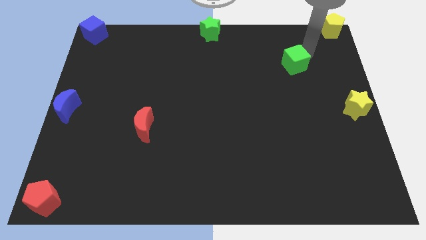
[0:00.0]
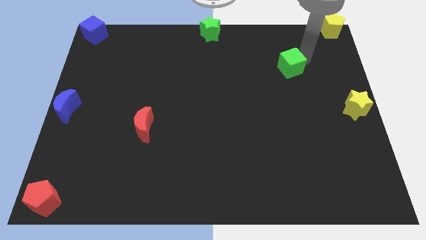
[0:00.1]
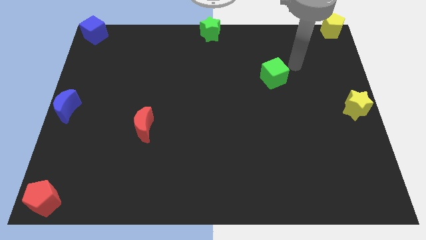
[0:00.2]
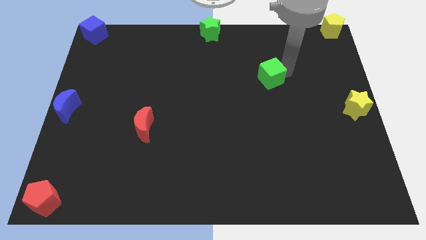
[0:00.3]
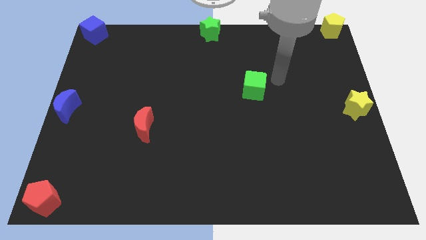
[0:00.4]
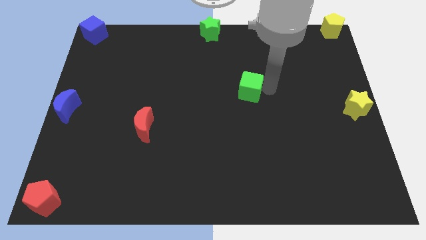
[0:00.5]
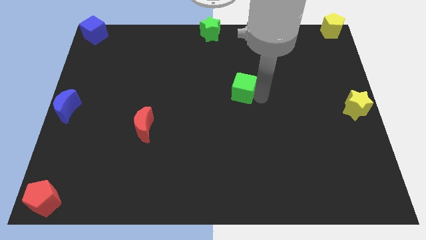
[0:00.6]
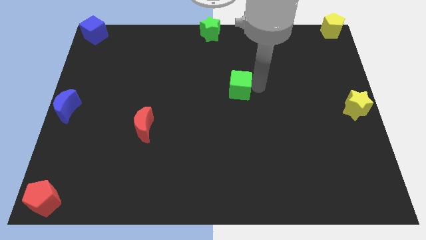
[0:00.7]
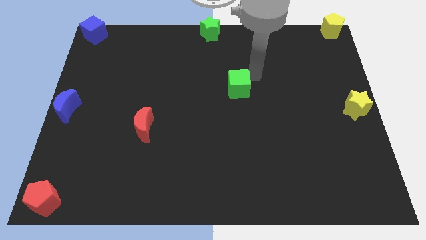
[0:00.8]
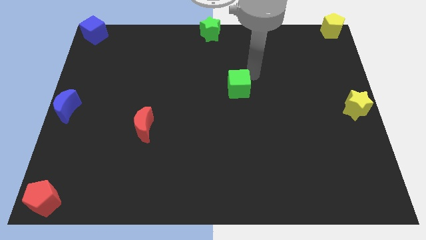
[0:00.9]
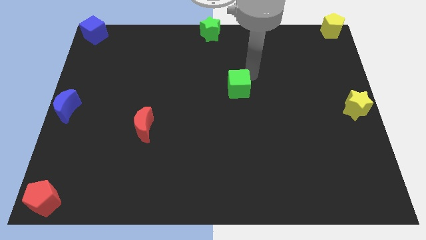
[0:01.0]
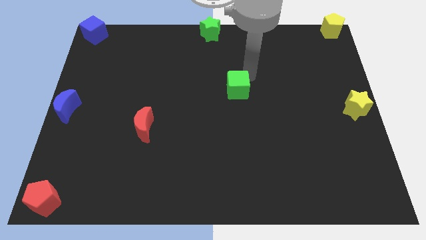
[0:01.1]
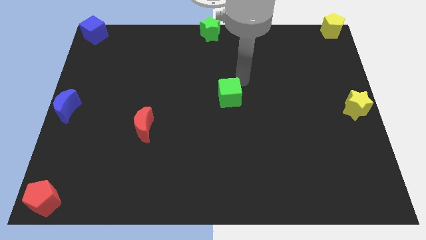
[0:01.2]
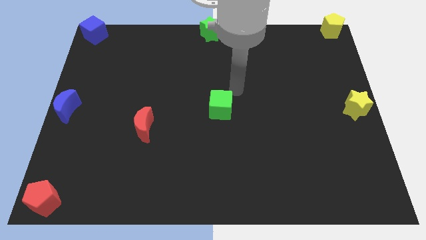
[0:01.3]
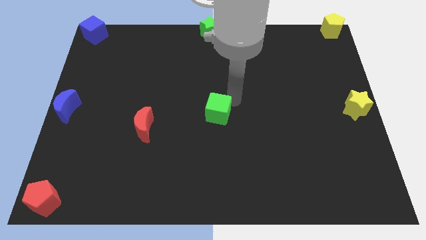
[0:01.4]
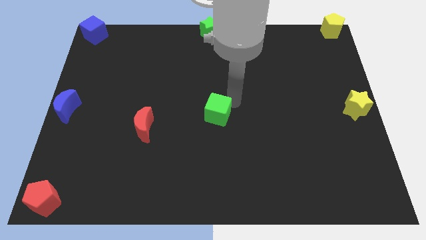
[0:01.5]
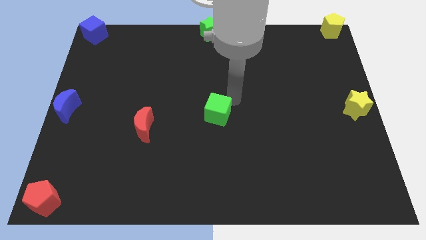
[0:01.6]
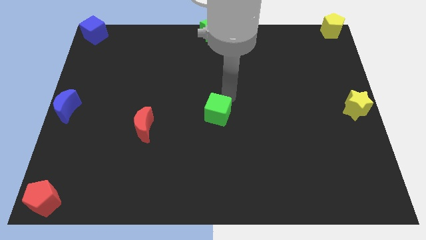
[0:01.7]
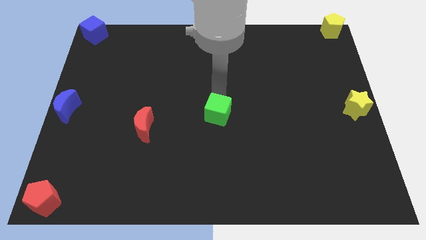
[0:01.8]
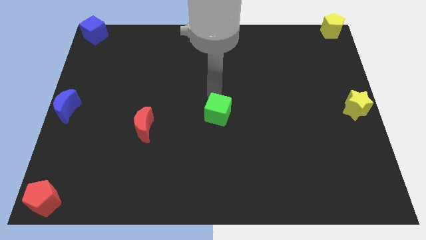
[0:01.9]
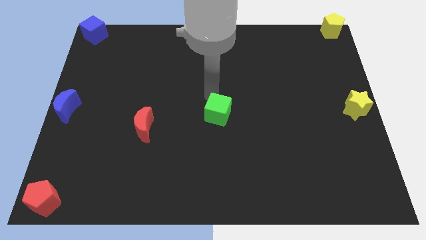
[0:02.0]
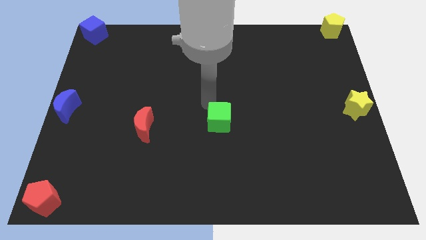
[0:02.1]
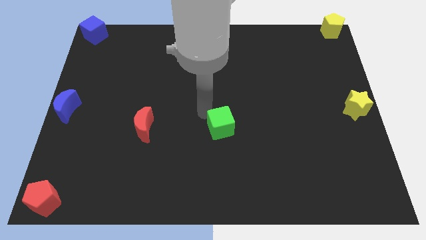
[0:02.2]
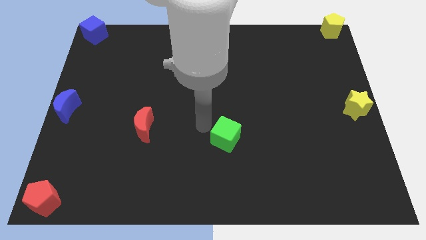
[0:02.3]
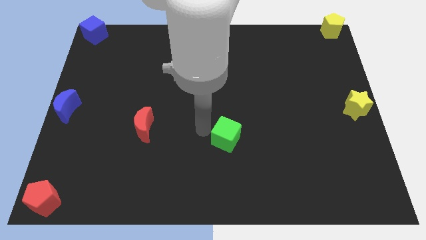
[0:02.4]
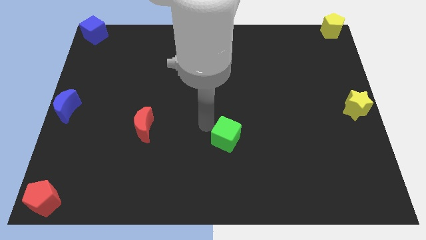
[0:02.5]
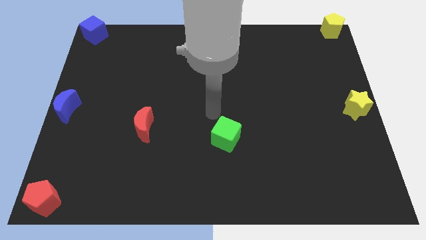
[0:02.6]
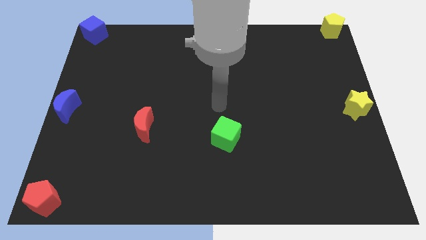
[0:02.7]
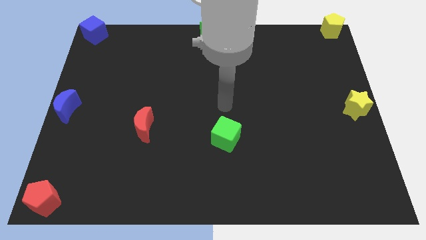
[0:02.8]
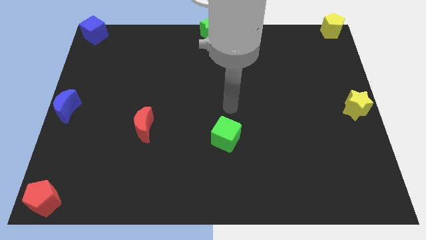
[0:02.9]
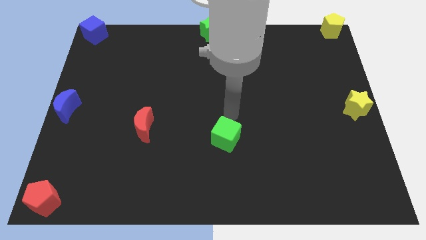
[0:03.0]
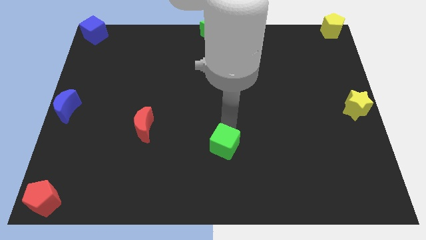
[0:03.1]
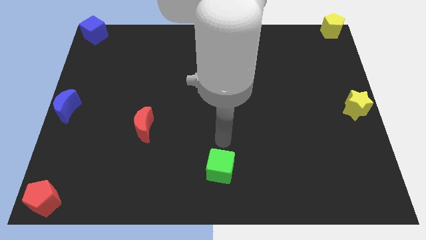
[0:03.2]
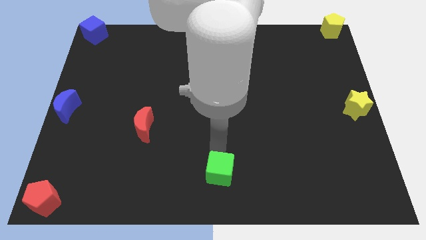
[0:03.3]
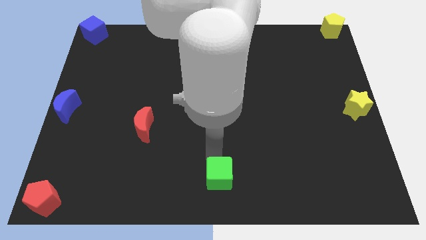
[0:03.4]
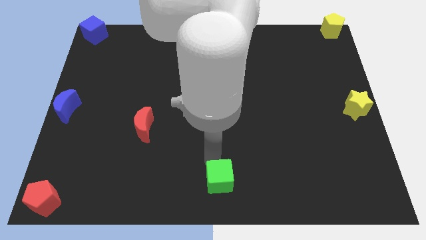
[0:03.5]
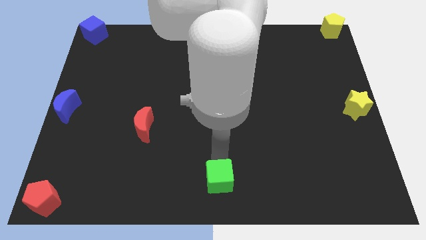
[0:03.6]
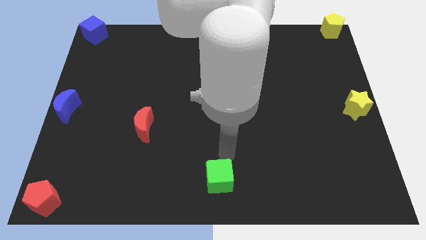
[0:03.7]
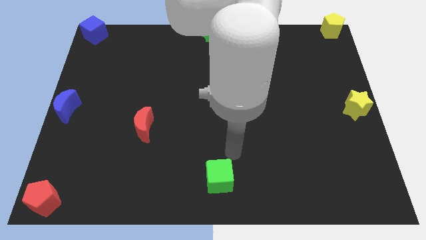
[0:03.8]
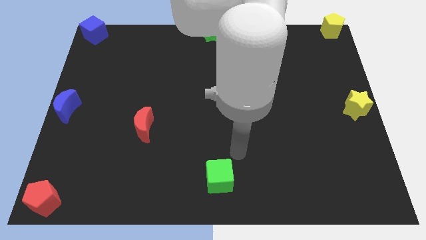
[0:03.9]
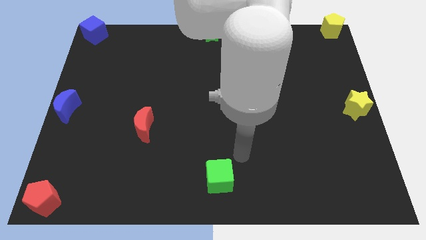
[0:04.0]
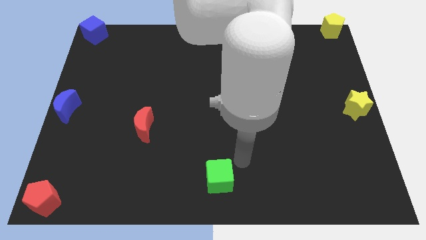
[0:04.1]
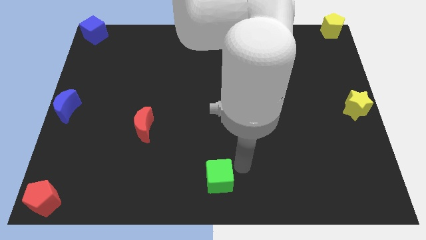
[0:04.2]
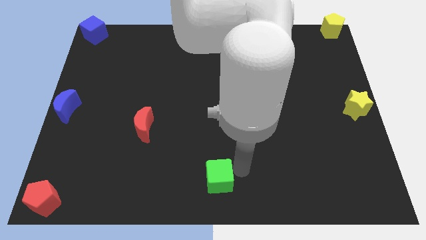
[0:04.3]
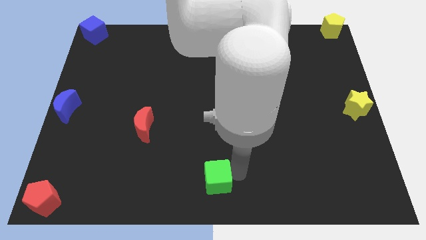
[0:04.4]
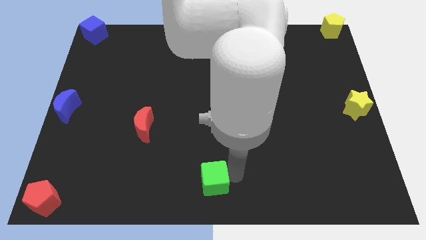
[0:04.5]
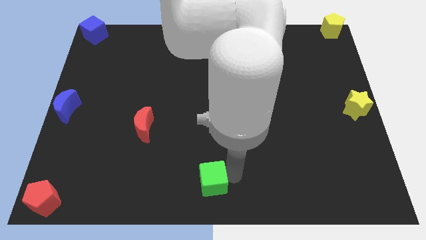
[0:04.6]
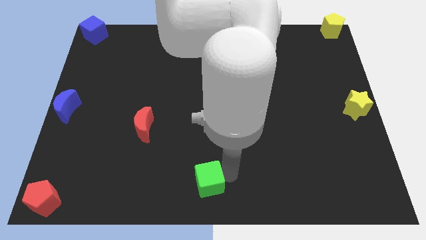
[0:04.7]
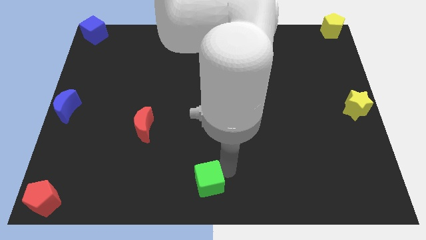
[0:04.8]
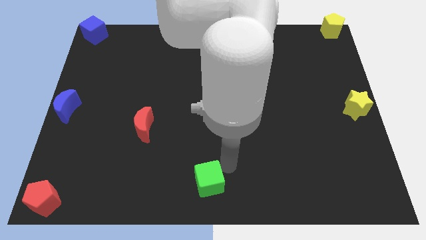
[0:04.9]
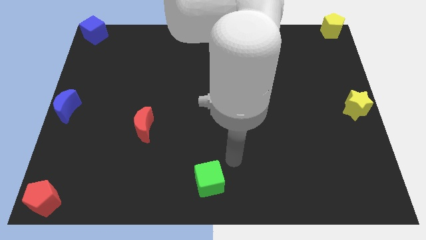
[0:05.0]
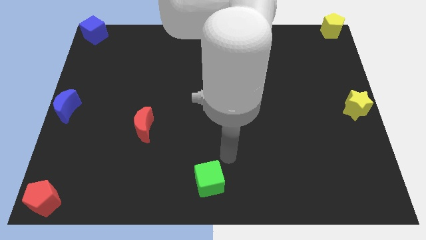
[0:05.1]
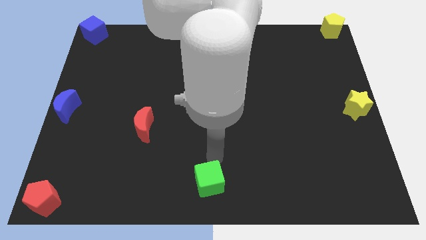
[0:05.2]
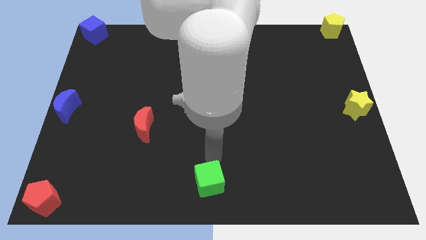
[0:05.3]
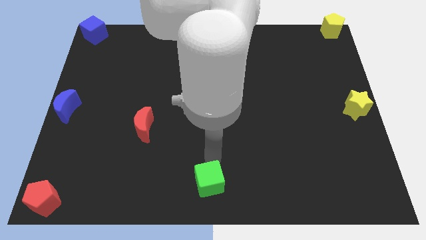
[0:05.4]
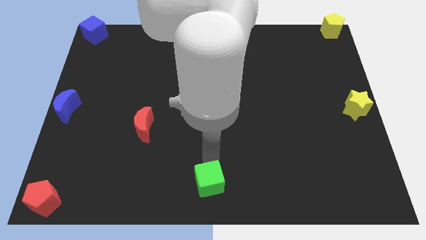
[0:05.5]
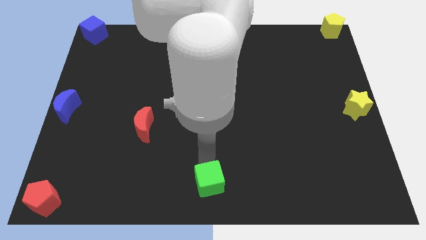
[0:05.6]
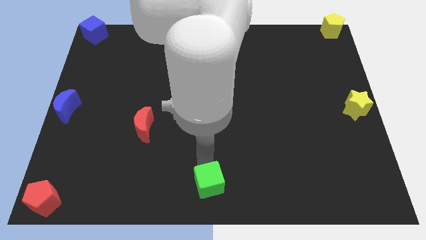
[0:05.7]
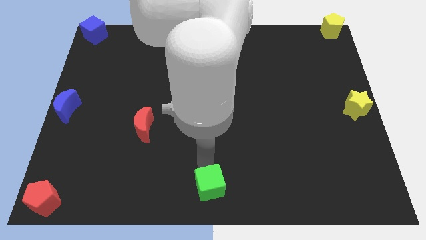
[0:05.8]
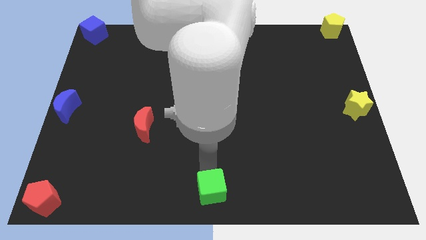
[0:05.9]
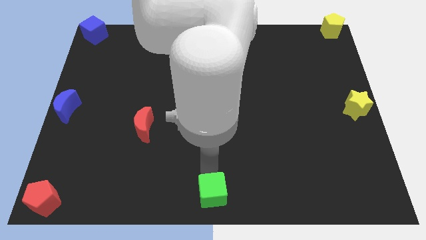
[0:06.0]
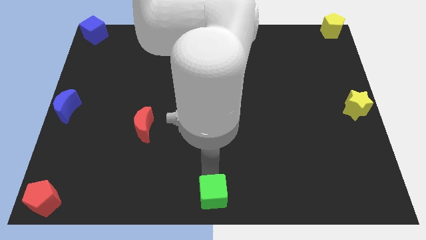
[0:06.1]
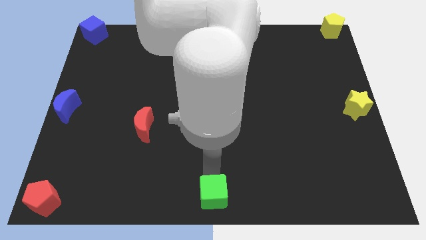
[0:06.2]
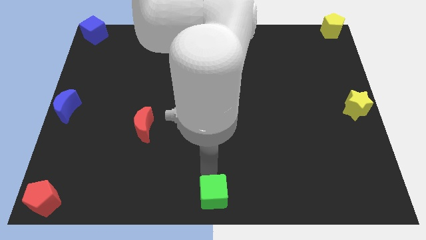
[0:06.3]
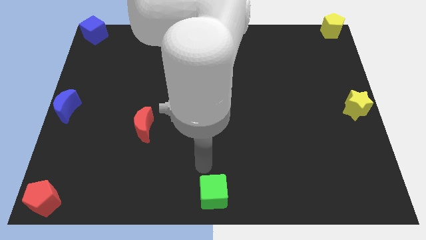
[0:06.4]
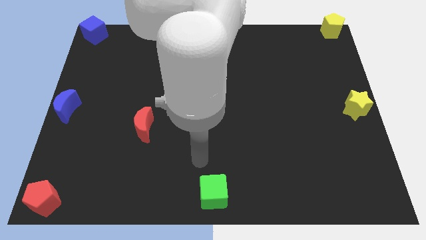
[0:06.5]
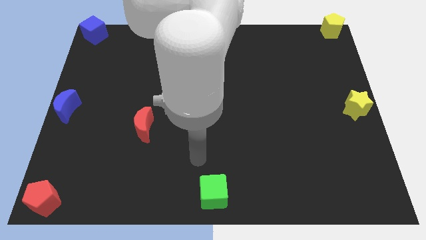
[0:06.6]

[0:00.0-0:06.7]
push green cube towards bottom middle of the board

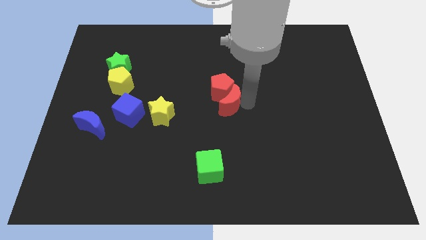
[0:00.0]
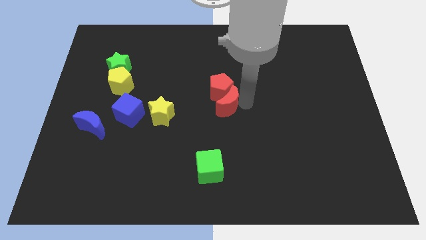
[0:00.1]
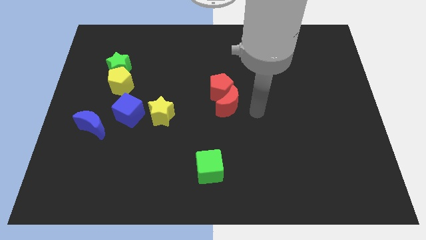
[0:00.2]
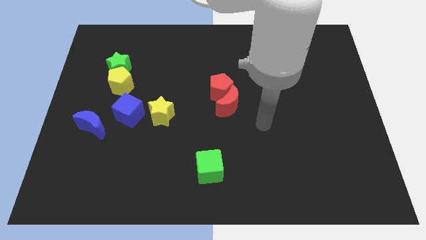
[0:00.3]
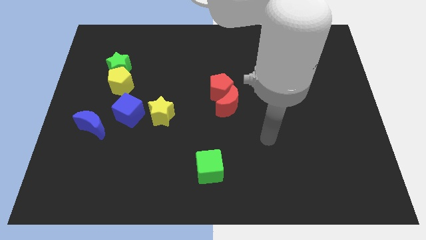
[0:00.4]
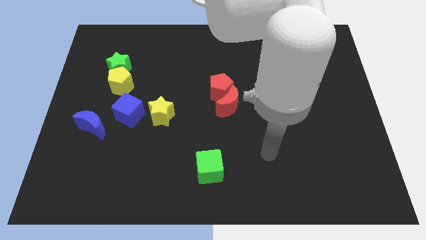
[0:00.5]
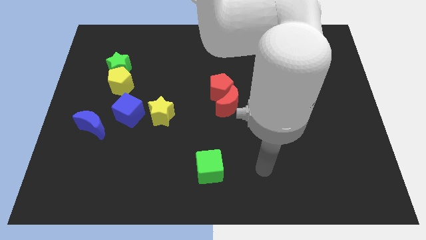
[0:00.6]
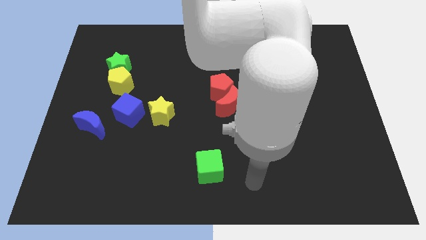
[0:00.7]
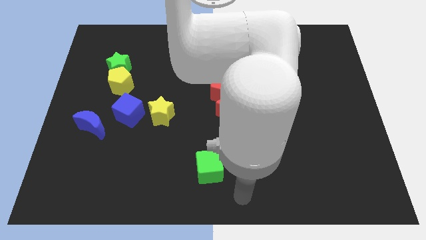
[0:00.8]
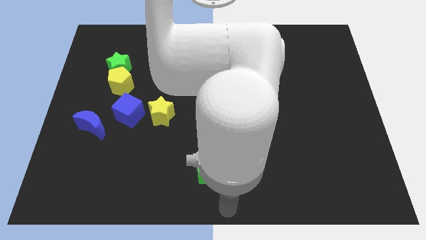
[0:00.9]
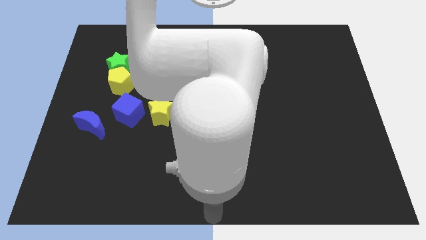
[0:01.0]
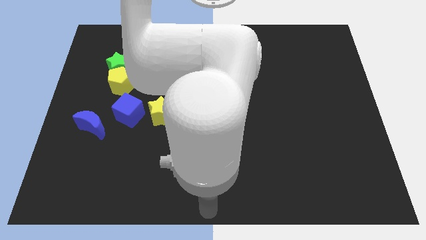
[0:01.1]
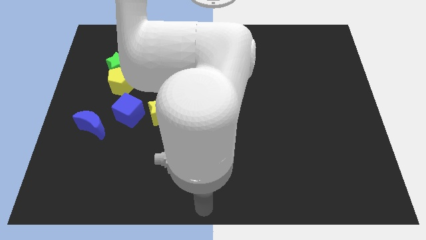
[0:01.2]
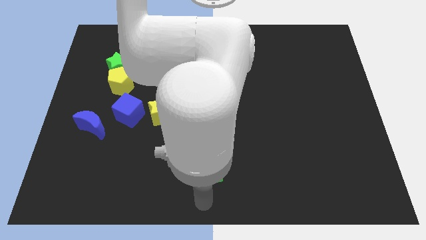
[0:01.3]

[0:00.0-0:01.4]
place the arm below the green cube

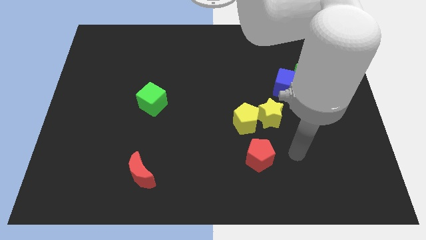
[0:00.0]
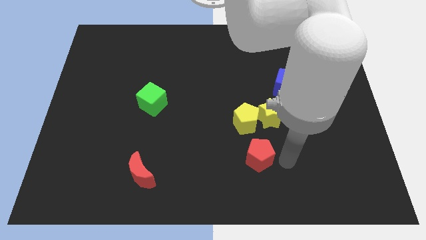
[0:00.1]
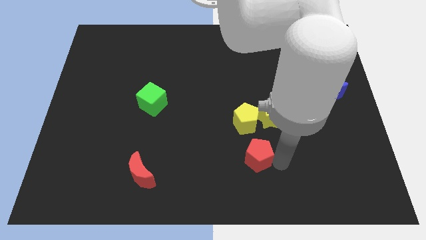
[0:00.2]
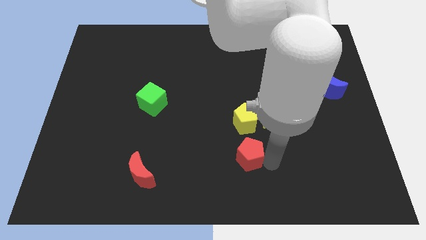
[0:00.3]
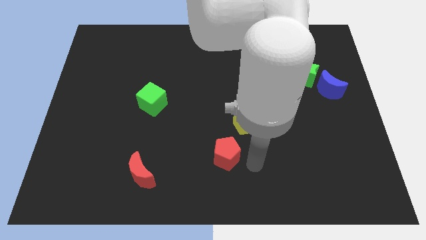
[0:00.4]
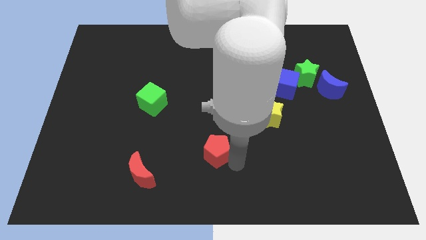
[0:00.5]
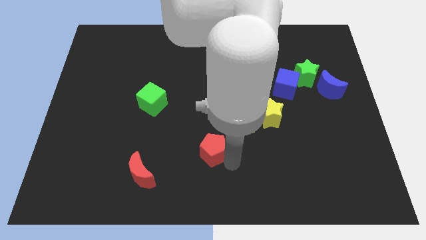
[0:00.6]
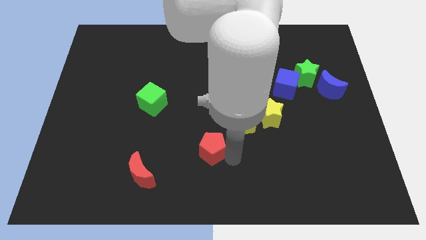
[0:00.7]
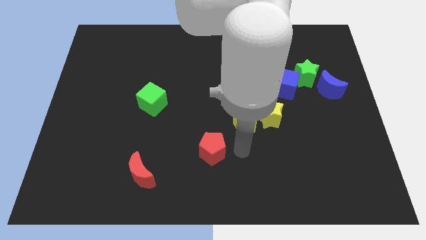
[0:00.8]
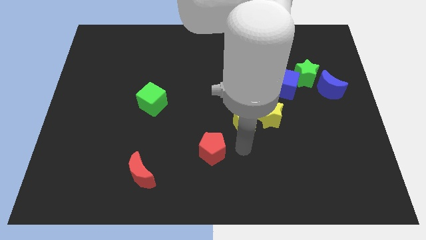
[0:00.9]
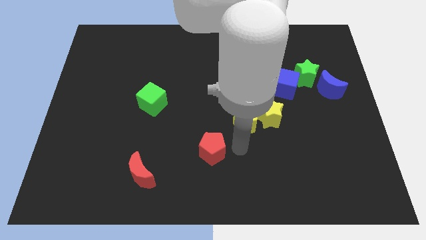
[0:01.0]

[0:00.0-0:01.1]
push the red pentagon diagonal to the yellow pentagon
